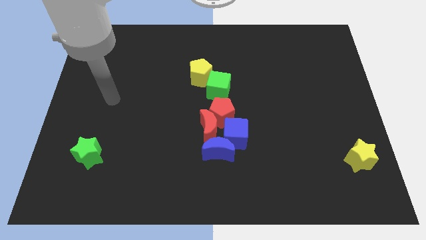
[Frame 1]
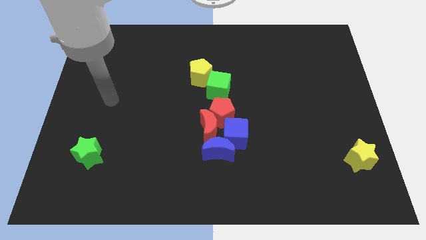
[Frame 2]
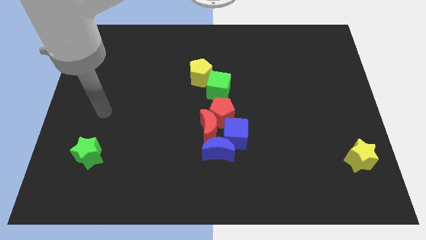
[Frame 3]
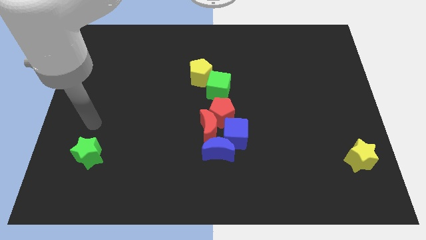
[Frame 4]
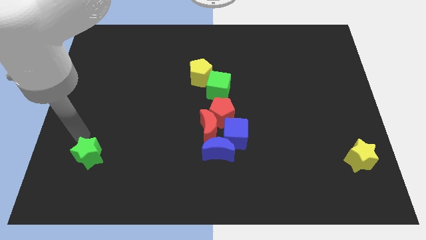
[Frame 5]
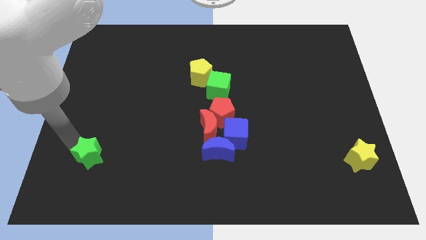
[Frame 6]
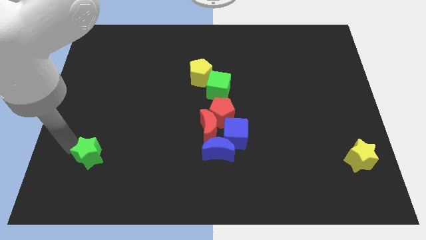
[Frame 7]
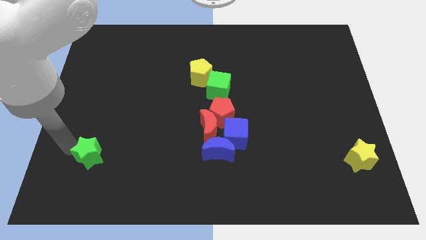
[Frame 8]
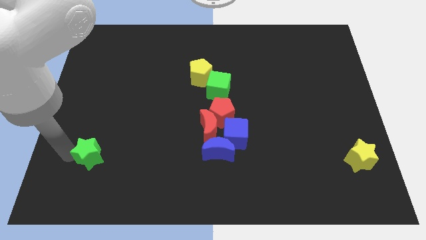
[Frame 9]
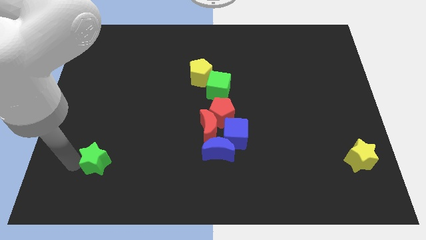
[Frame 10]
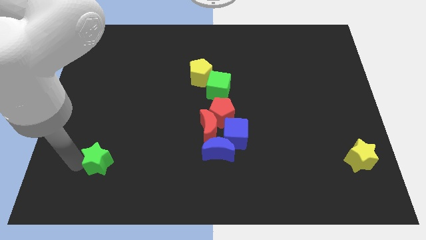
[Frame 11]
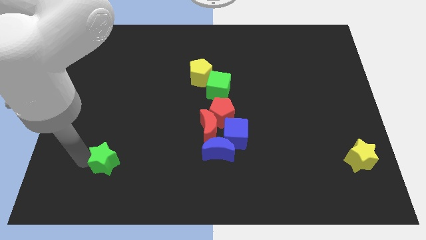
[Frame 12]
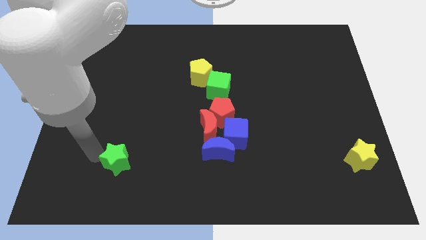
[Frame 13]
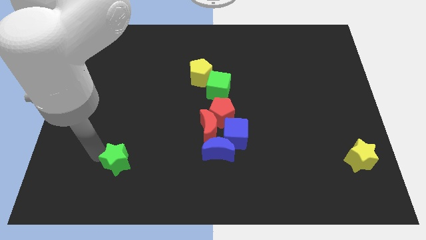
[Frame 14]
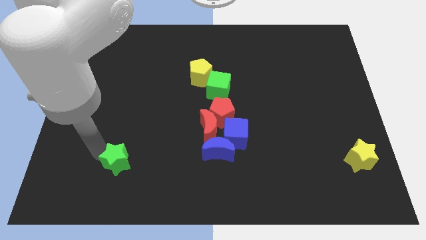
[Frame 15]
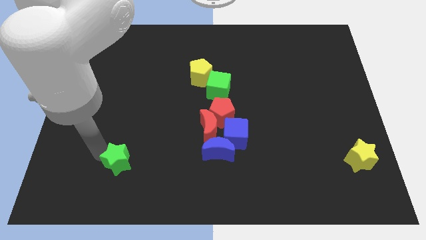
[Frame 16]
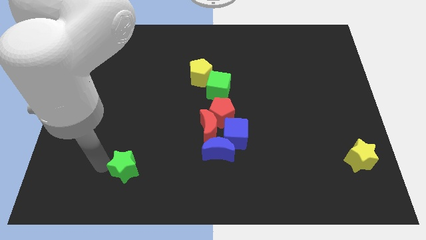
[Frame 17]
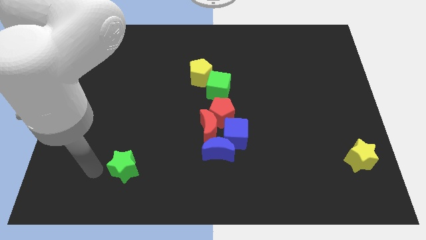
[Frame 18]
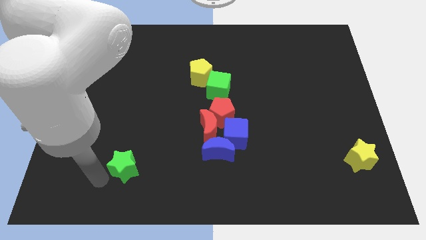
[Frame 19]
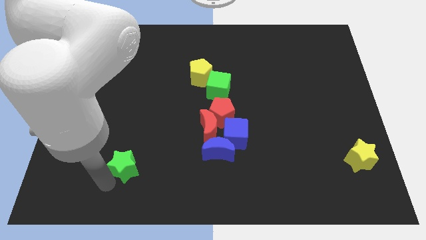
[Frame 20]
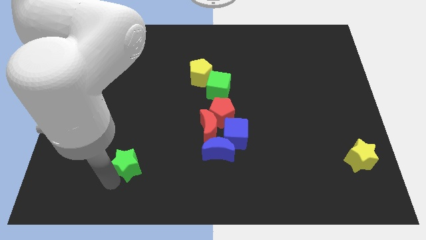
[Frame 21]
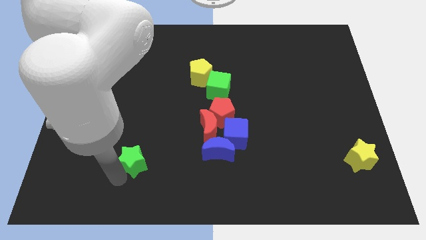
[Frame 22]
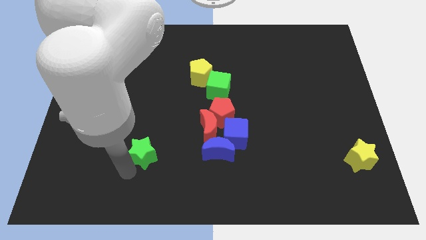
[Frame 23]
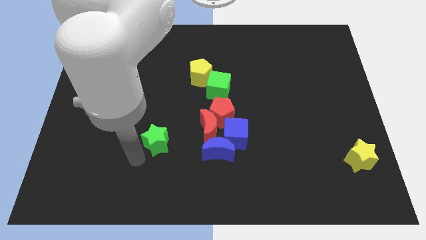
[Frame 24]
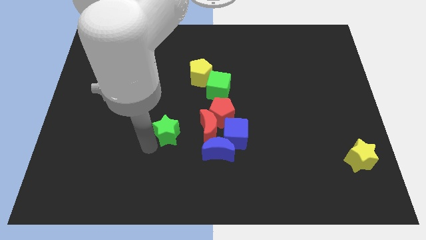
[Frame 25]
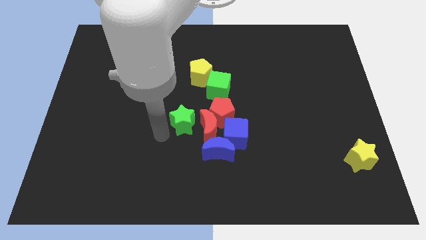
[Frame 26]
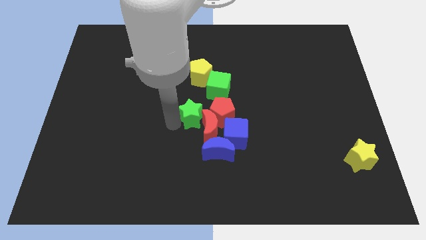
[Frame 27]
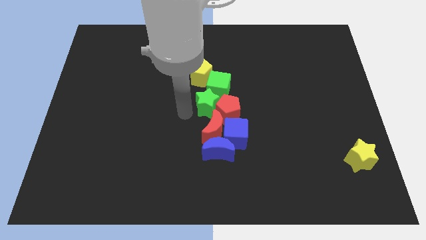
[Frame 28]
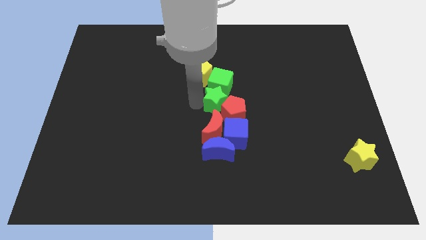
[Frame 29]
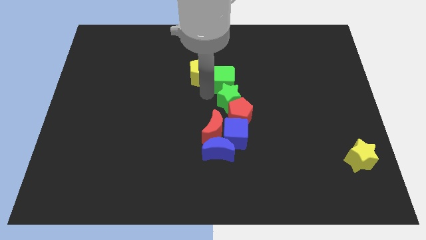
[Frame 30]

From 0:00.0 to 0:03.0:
move the green star into the bottom of the green cube

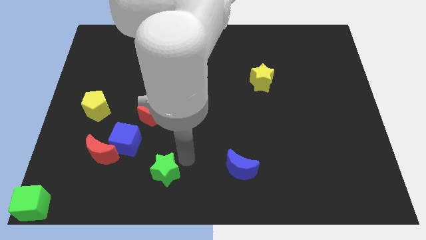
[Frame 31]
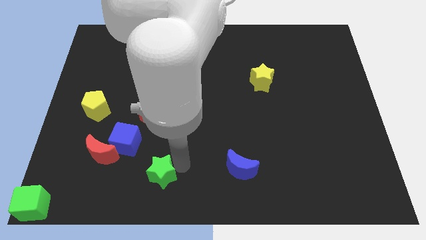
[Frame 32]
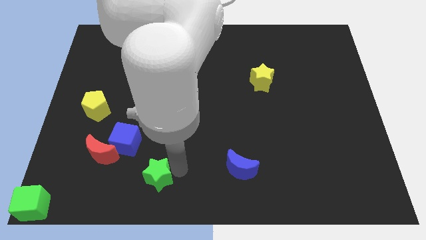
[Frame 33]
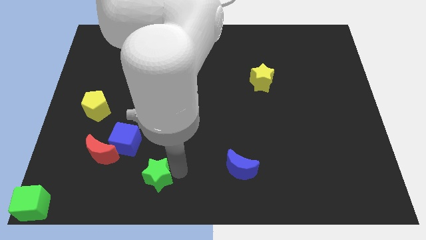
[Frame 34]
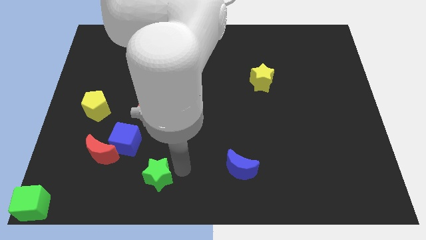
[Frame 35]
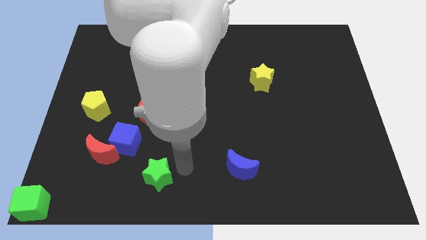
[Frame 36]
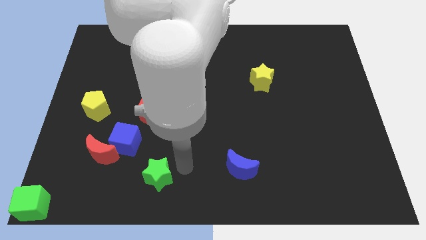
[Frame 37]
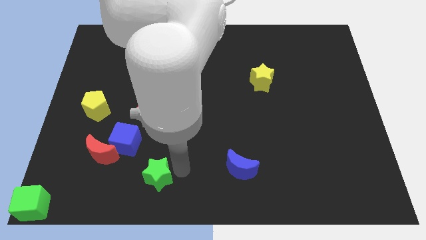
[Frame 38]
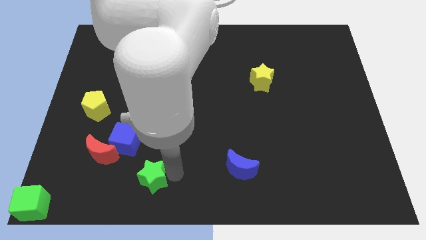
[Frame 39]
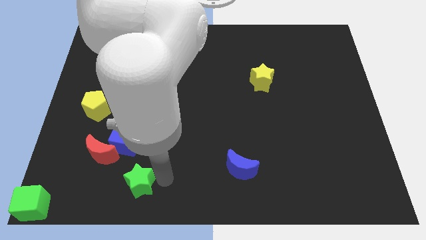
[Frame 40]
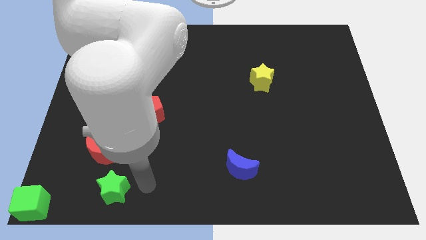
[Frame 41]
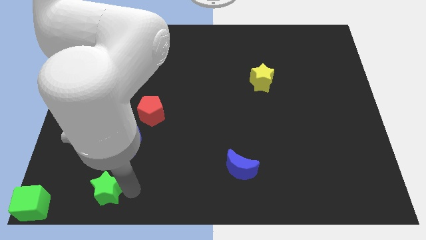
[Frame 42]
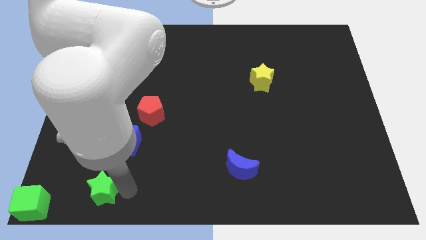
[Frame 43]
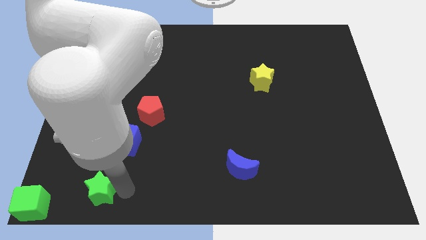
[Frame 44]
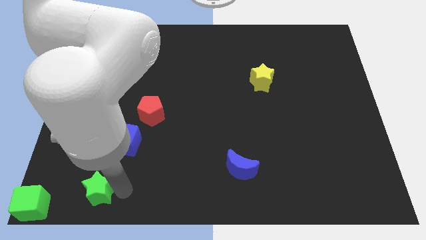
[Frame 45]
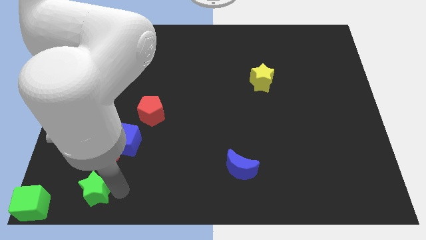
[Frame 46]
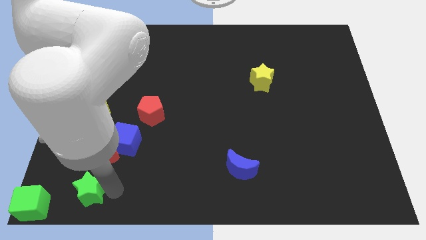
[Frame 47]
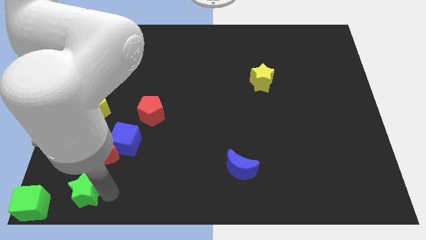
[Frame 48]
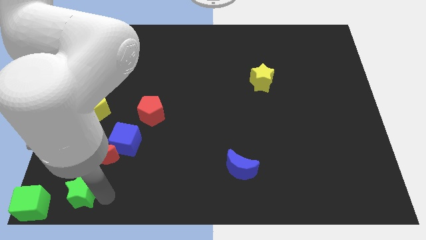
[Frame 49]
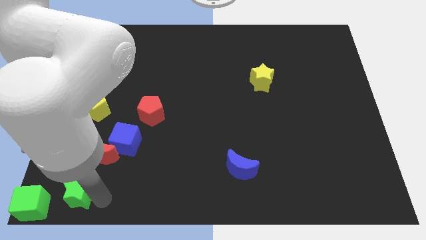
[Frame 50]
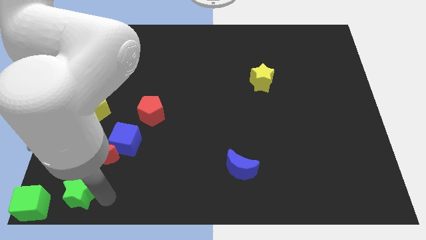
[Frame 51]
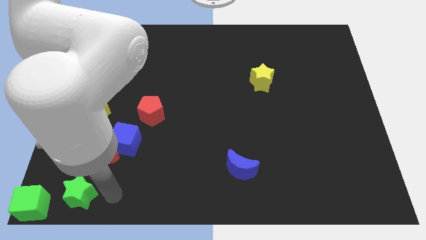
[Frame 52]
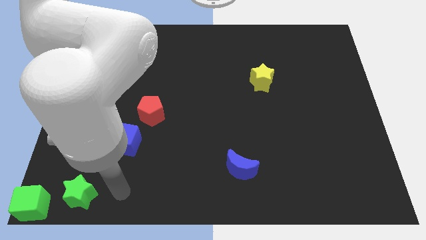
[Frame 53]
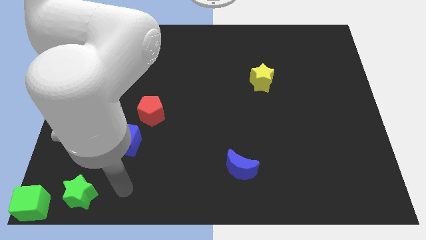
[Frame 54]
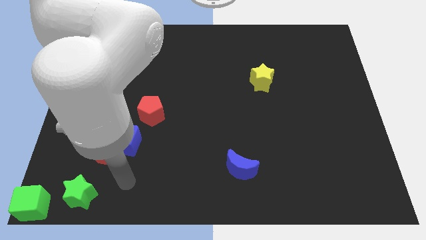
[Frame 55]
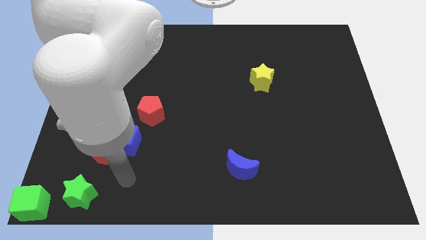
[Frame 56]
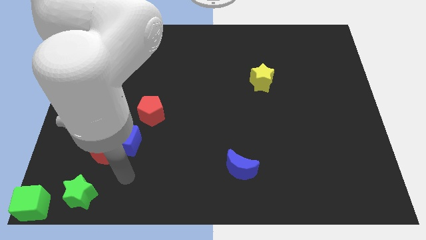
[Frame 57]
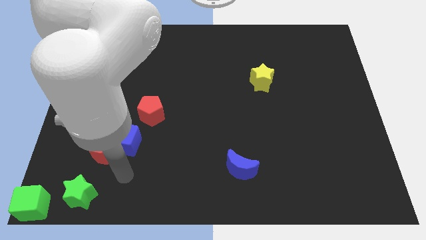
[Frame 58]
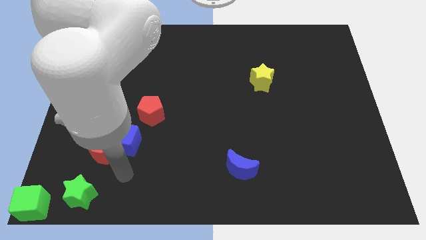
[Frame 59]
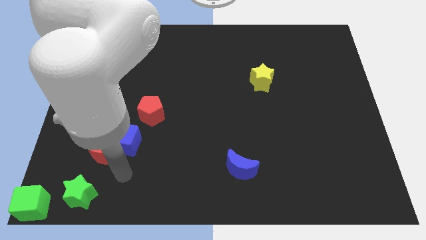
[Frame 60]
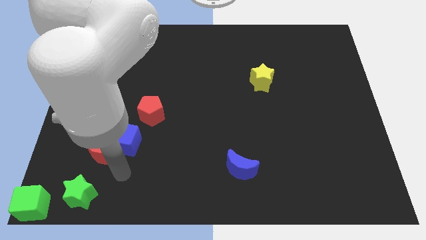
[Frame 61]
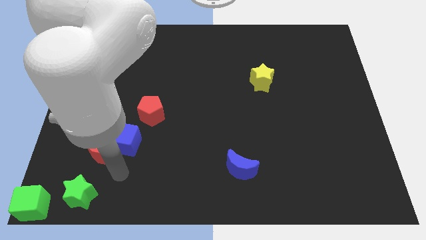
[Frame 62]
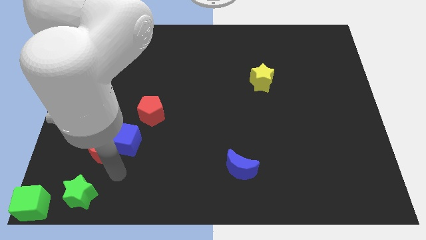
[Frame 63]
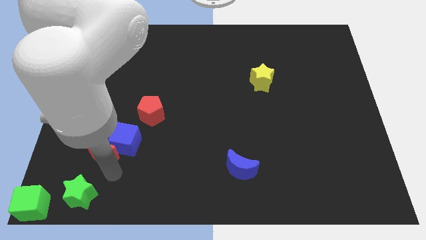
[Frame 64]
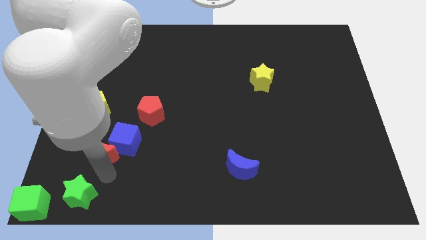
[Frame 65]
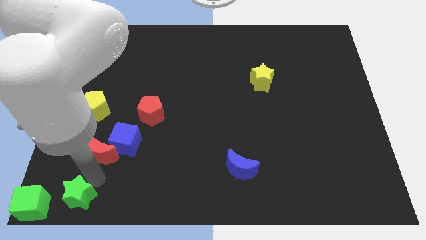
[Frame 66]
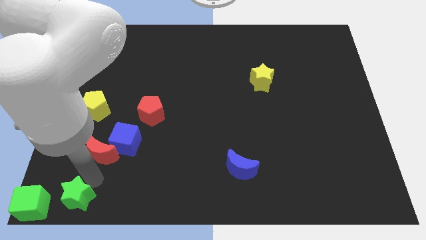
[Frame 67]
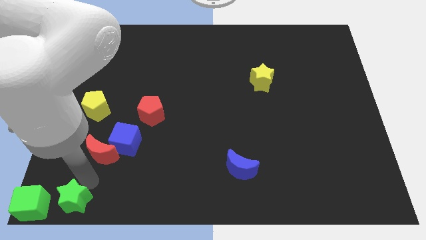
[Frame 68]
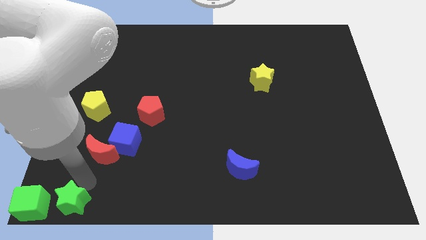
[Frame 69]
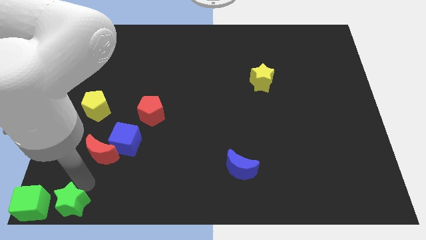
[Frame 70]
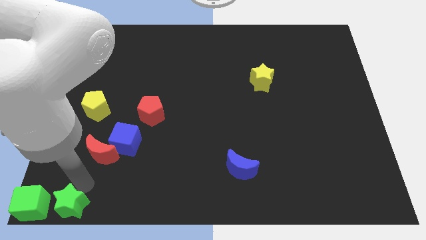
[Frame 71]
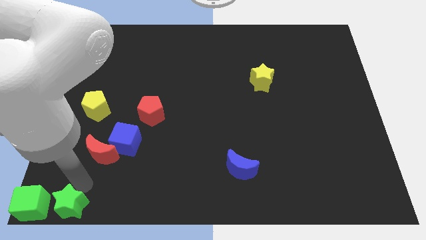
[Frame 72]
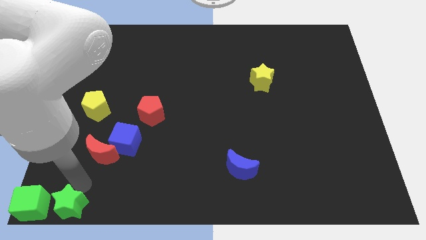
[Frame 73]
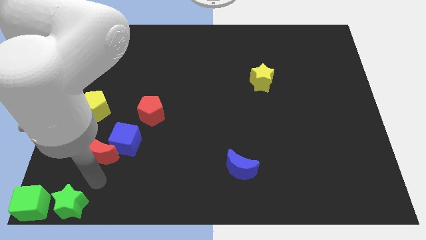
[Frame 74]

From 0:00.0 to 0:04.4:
push the green star to the right side of the green cube

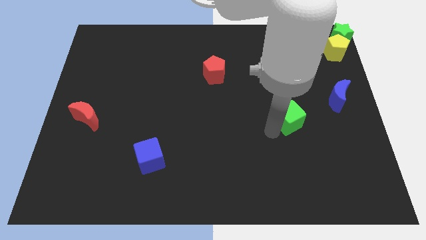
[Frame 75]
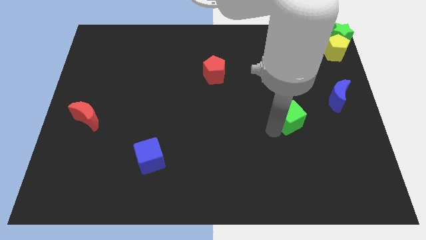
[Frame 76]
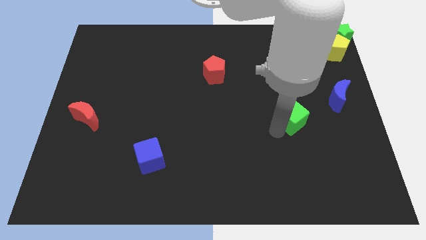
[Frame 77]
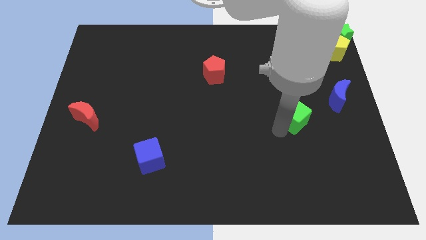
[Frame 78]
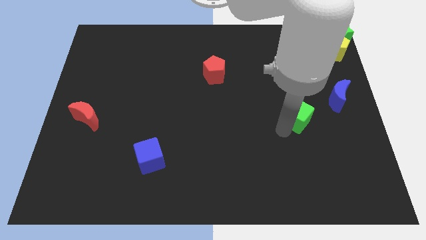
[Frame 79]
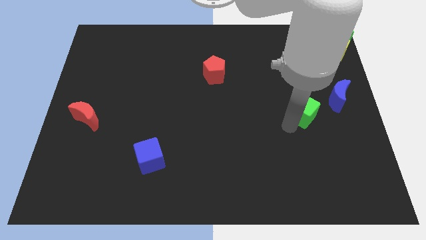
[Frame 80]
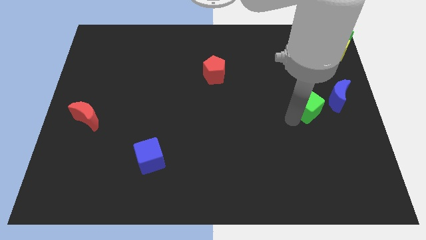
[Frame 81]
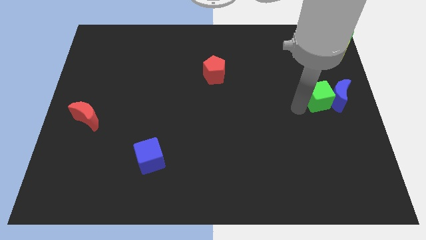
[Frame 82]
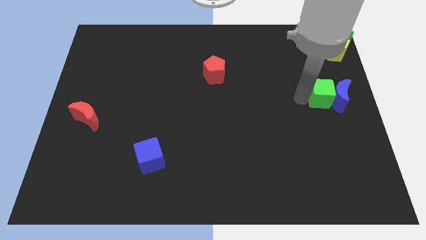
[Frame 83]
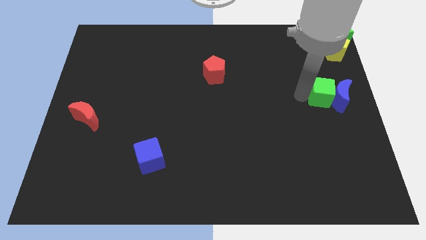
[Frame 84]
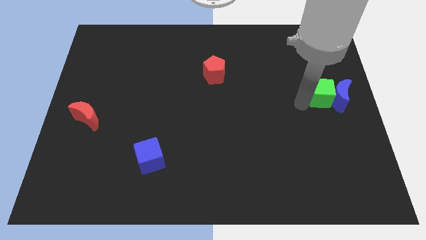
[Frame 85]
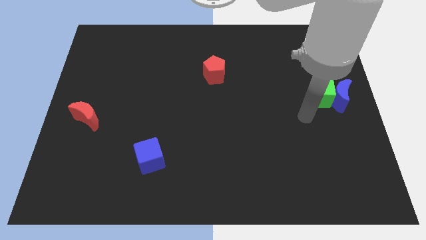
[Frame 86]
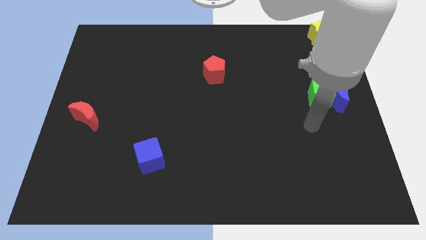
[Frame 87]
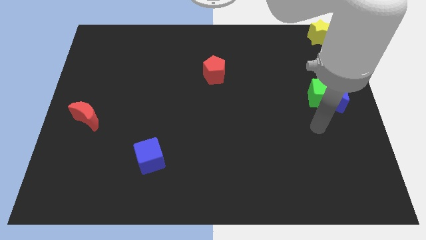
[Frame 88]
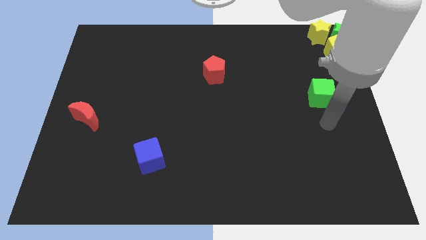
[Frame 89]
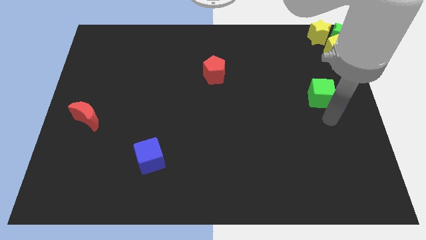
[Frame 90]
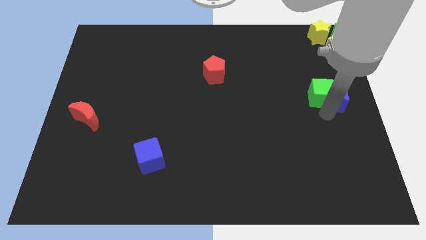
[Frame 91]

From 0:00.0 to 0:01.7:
push green cube into the blue moon
